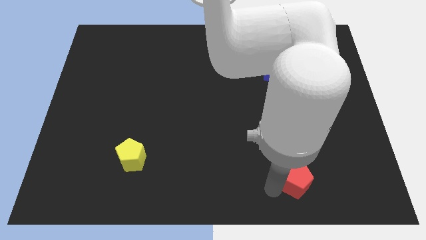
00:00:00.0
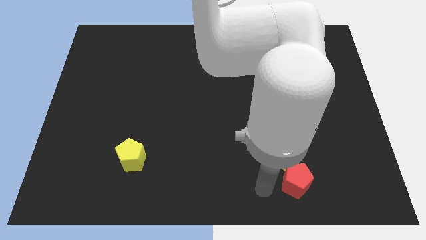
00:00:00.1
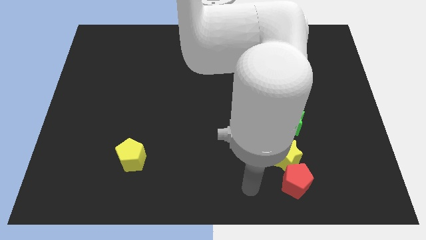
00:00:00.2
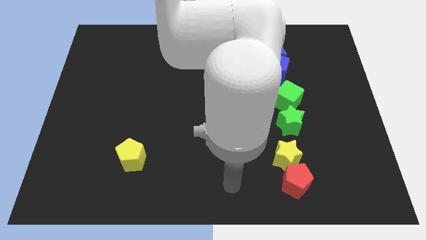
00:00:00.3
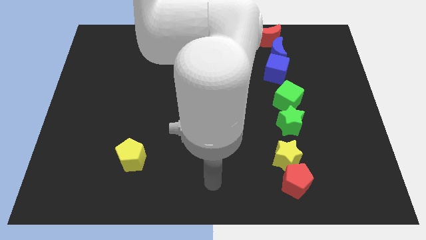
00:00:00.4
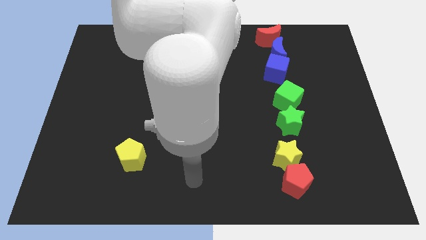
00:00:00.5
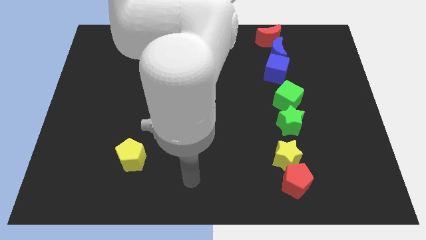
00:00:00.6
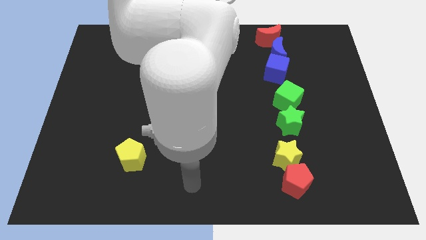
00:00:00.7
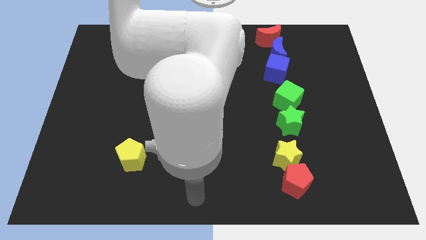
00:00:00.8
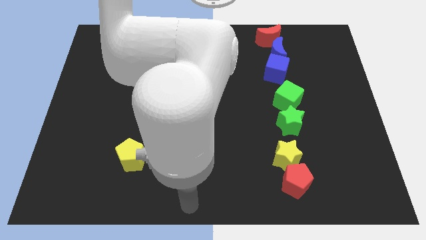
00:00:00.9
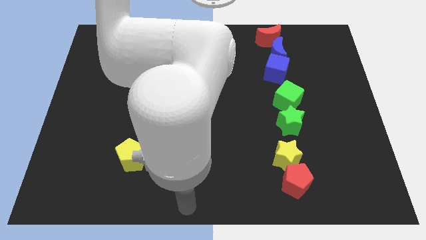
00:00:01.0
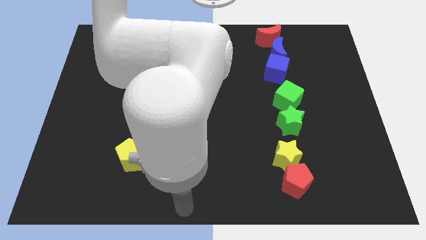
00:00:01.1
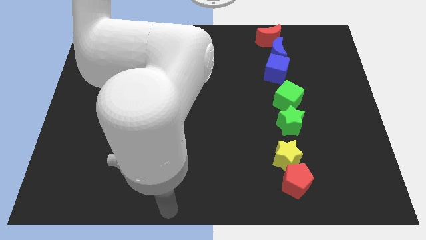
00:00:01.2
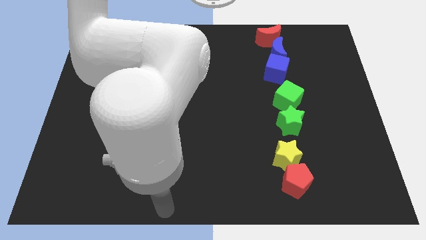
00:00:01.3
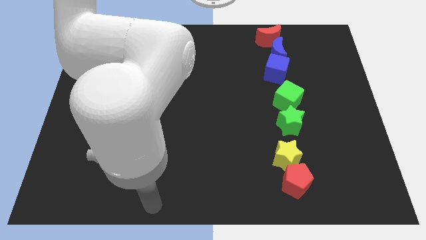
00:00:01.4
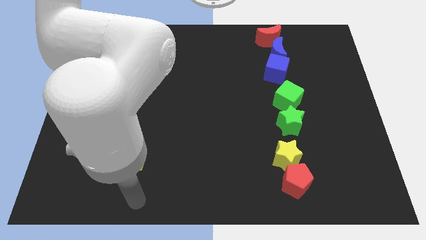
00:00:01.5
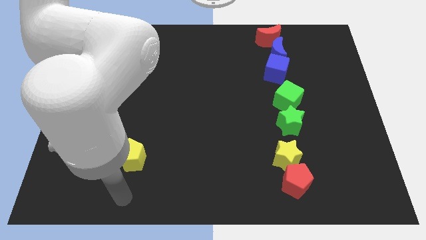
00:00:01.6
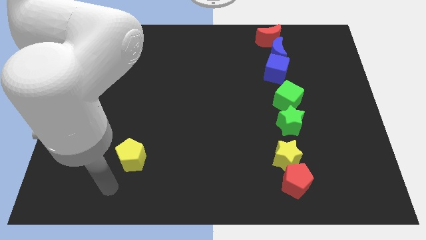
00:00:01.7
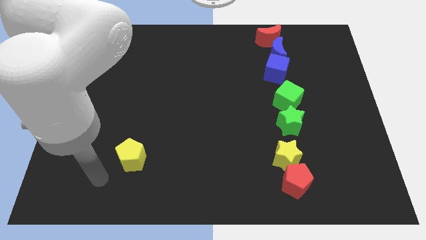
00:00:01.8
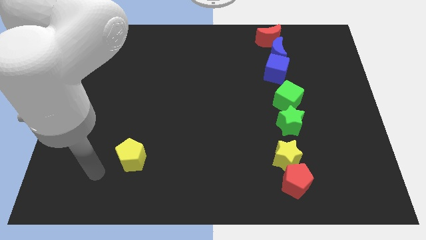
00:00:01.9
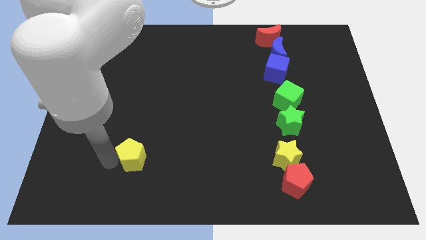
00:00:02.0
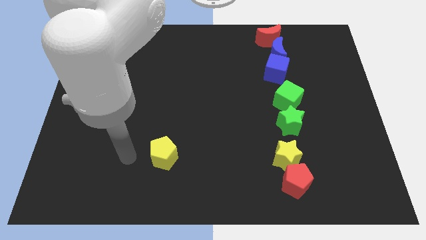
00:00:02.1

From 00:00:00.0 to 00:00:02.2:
place your hand close to the yellow pentagon

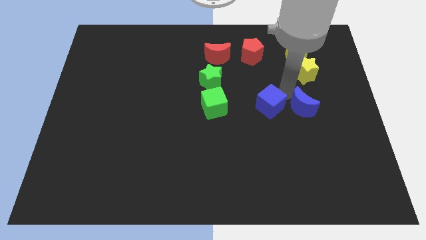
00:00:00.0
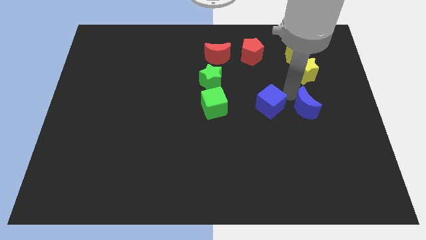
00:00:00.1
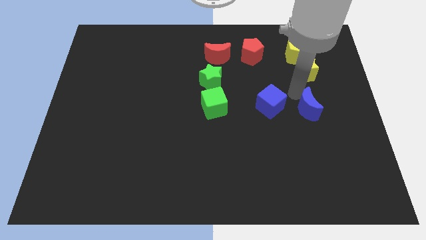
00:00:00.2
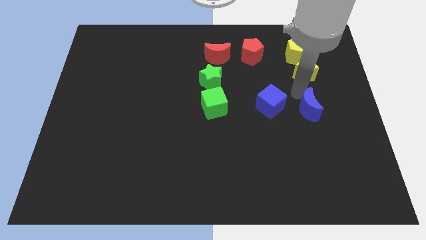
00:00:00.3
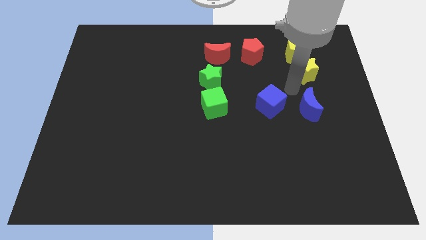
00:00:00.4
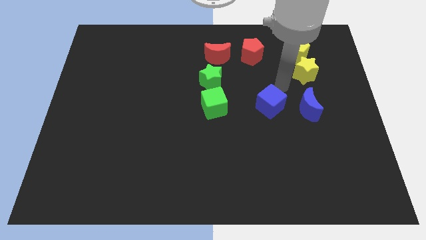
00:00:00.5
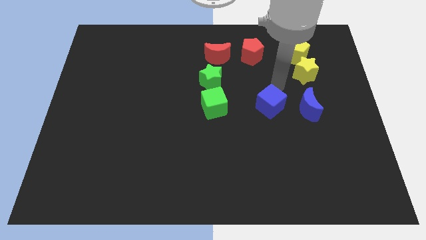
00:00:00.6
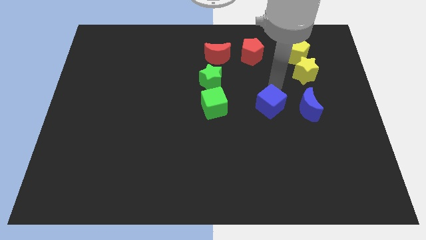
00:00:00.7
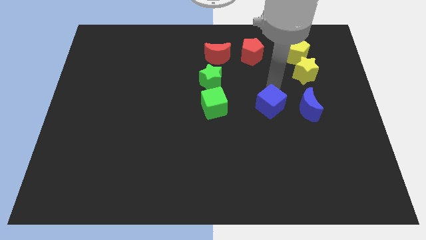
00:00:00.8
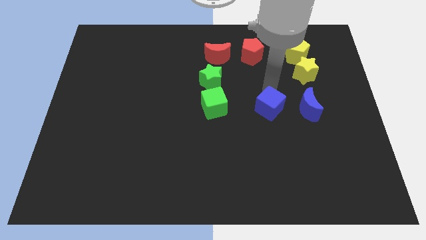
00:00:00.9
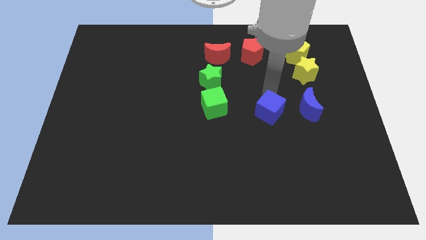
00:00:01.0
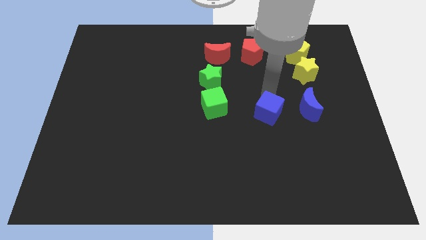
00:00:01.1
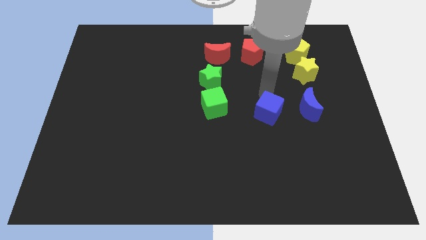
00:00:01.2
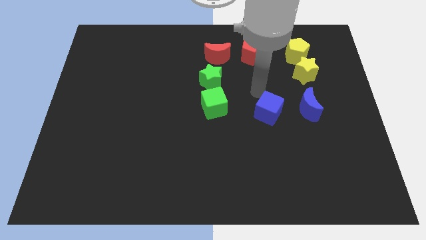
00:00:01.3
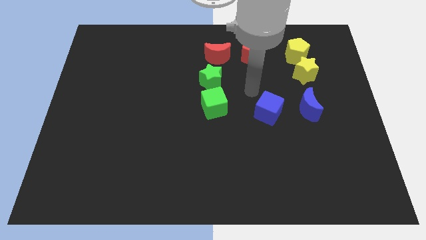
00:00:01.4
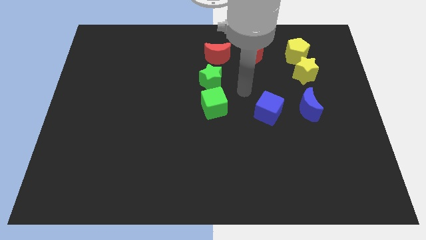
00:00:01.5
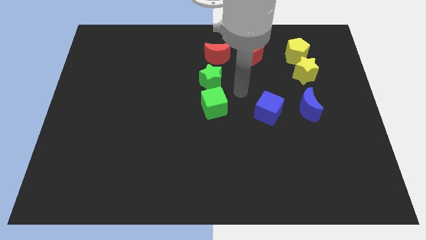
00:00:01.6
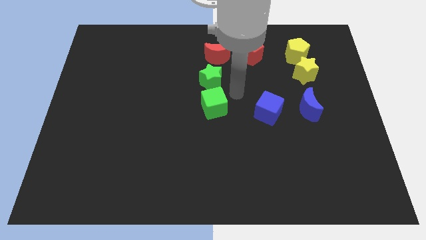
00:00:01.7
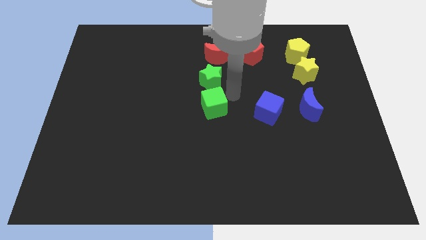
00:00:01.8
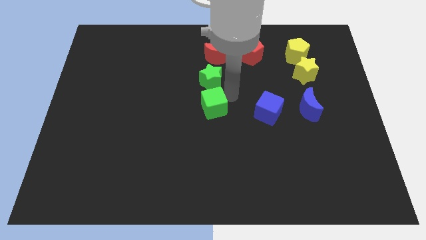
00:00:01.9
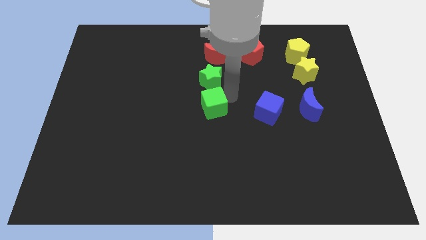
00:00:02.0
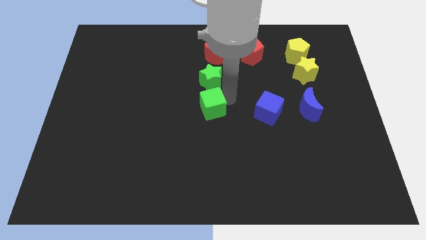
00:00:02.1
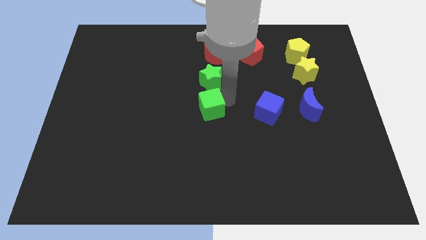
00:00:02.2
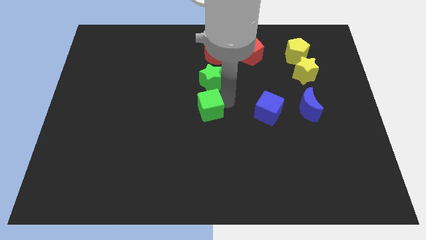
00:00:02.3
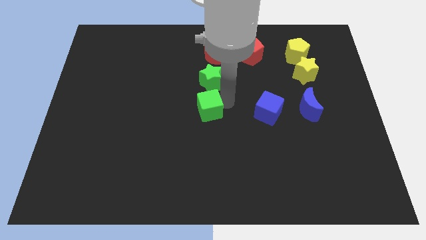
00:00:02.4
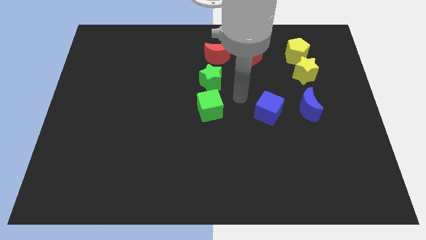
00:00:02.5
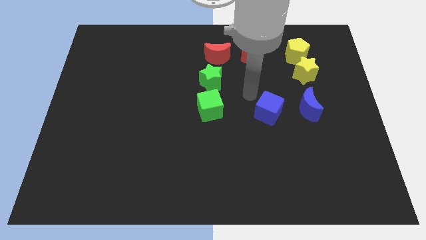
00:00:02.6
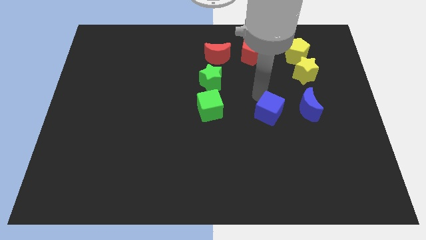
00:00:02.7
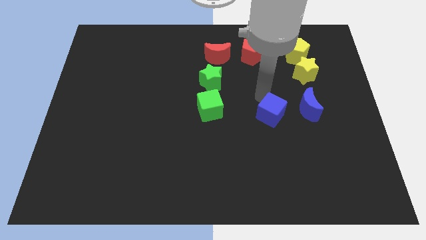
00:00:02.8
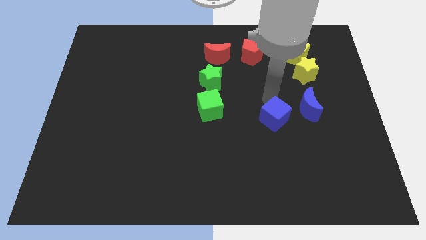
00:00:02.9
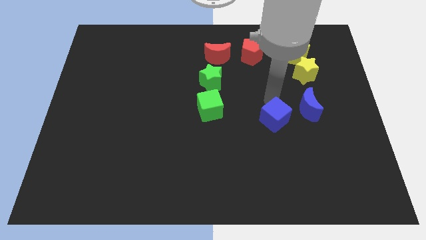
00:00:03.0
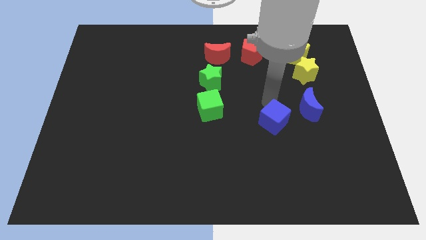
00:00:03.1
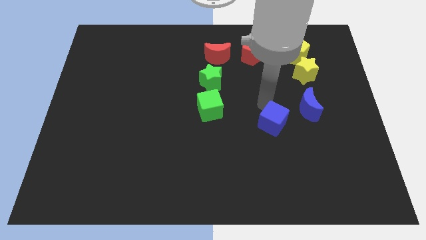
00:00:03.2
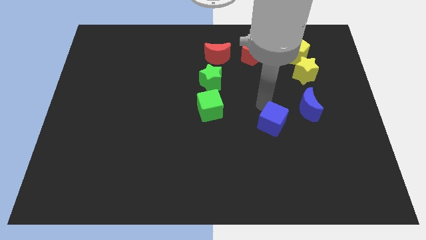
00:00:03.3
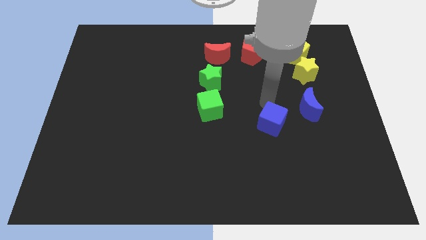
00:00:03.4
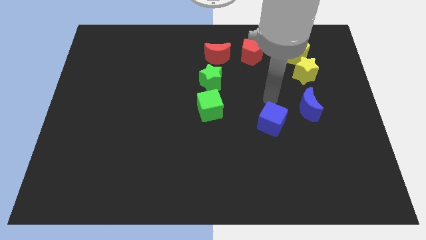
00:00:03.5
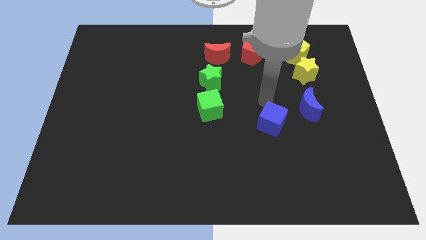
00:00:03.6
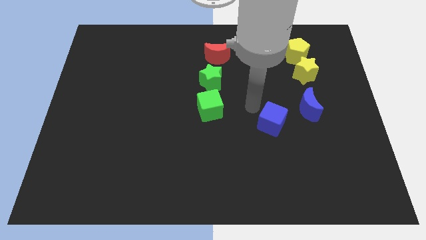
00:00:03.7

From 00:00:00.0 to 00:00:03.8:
move the blue cube away from the blue moon

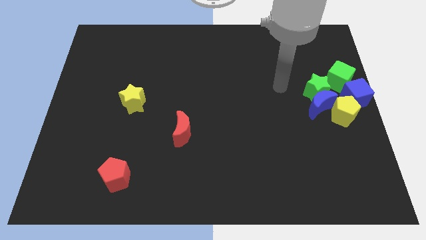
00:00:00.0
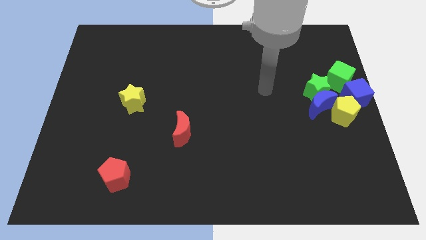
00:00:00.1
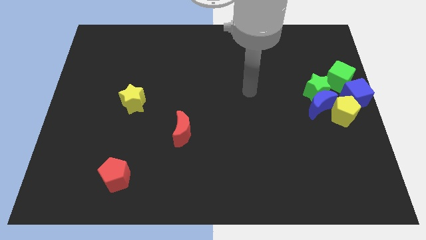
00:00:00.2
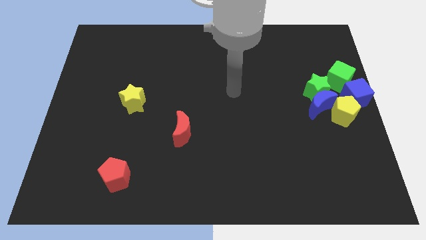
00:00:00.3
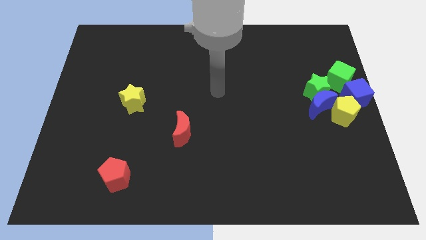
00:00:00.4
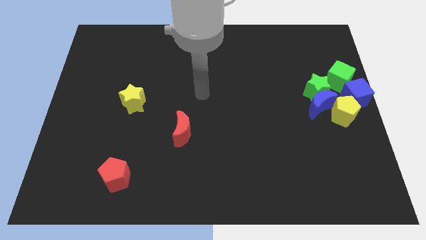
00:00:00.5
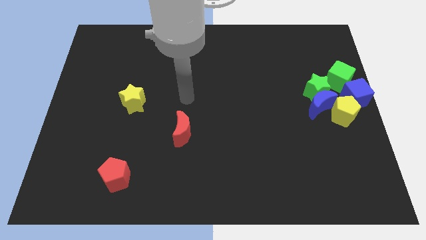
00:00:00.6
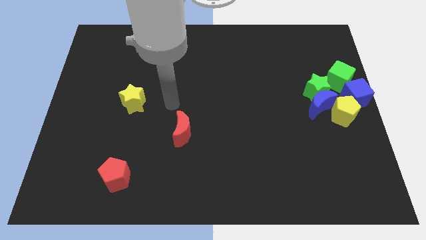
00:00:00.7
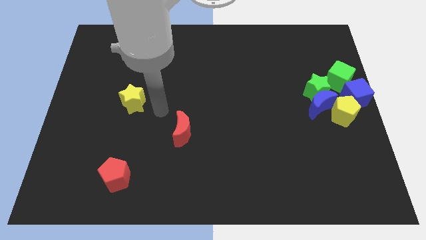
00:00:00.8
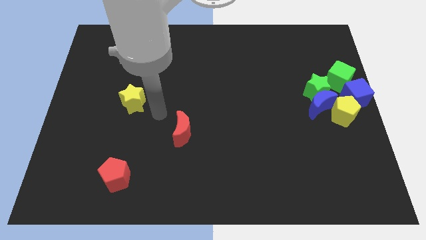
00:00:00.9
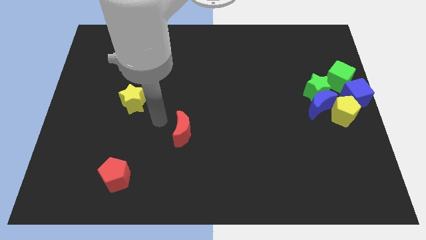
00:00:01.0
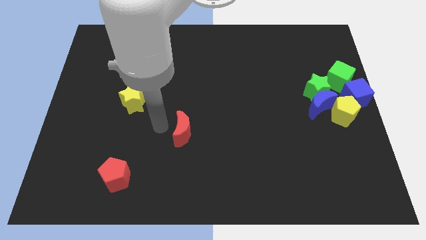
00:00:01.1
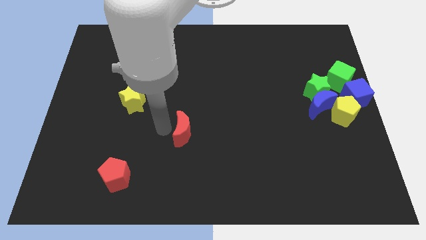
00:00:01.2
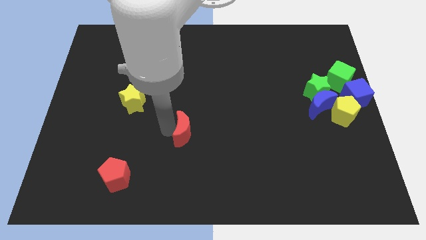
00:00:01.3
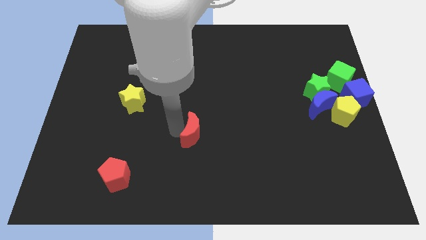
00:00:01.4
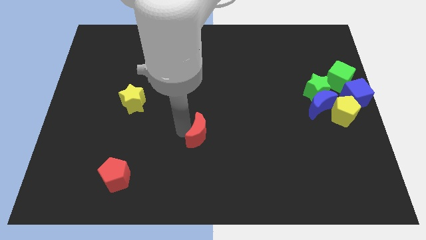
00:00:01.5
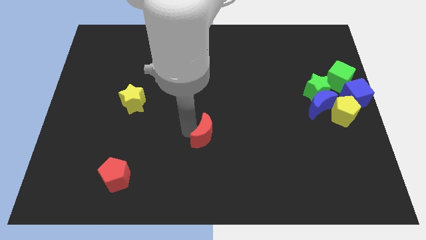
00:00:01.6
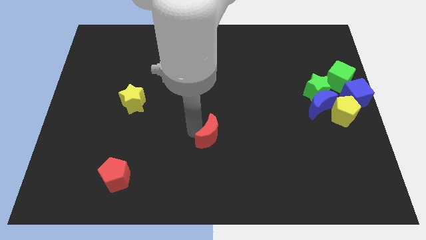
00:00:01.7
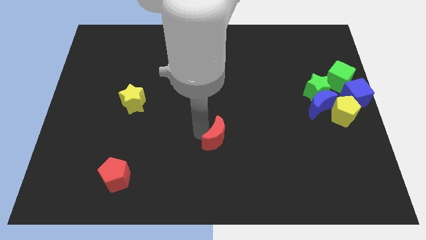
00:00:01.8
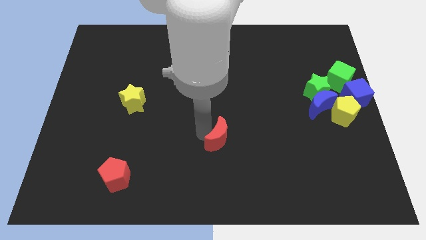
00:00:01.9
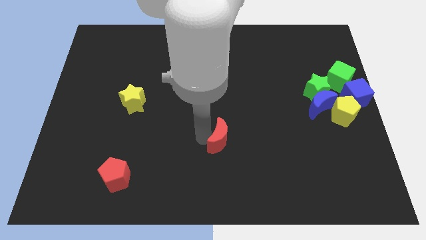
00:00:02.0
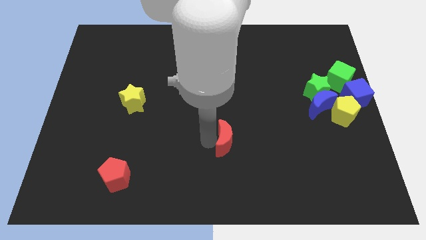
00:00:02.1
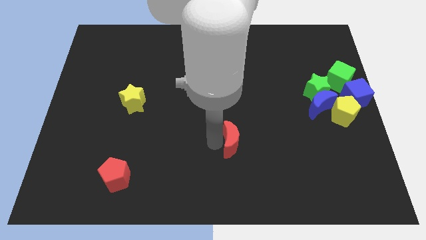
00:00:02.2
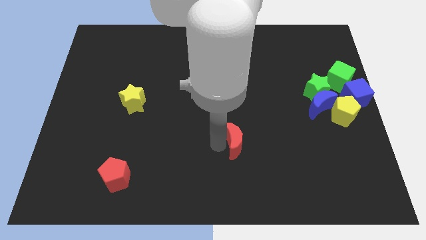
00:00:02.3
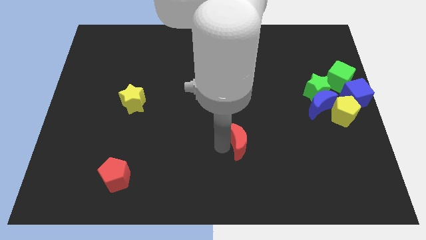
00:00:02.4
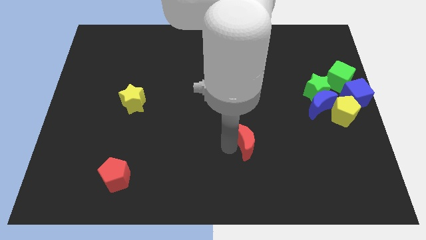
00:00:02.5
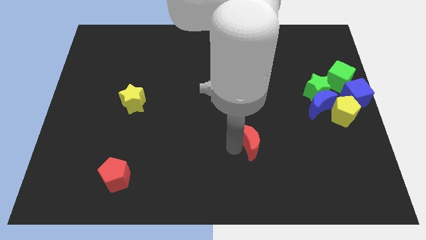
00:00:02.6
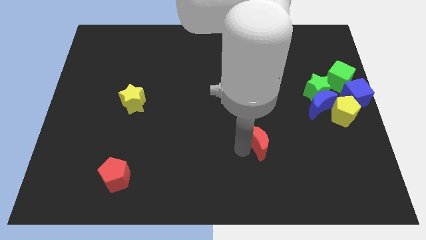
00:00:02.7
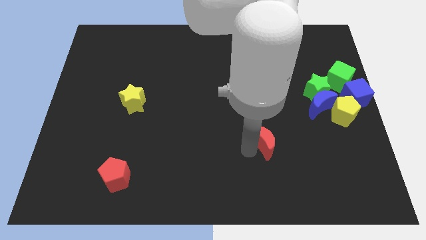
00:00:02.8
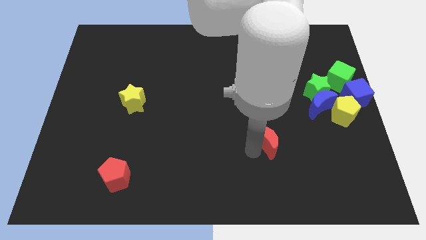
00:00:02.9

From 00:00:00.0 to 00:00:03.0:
move the red moon towards the right
